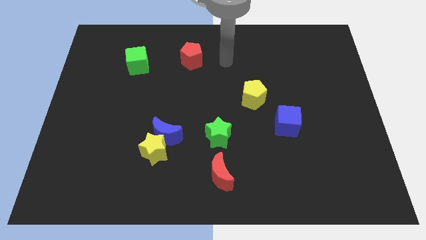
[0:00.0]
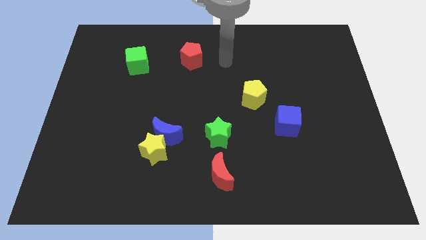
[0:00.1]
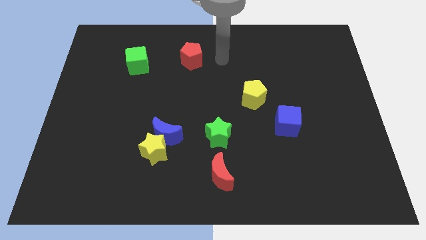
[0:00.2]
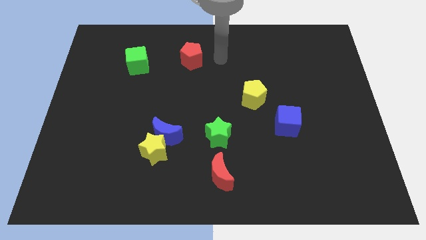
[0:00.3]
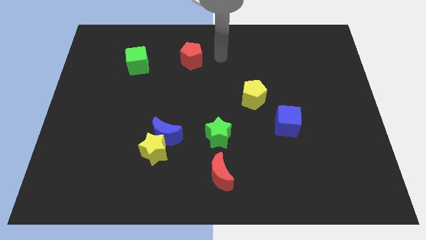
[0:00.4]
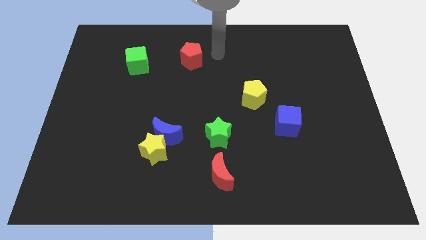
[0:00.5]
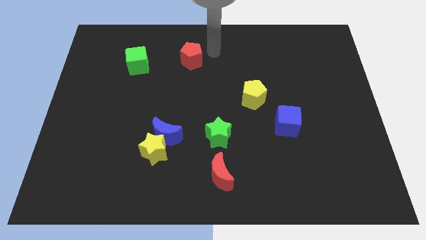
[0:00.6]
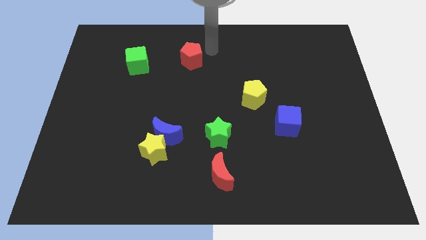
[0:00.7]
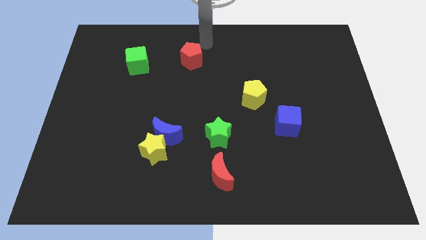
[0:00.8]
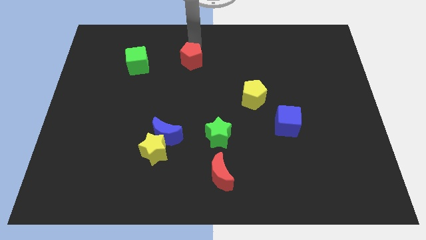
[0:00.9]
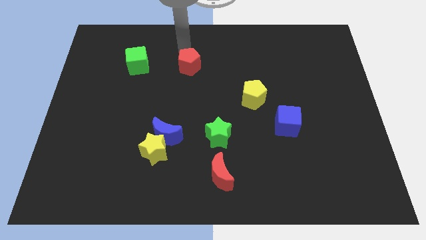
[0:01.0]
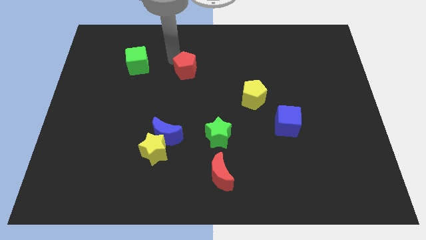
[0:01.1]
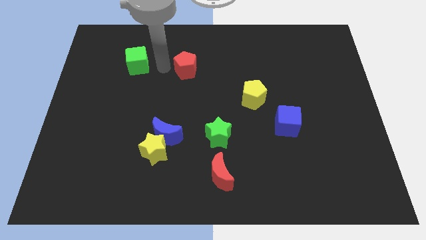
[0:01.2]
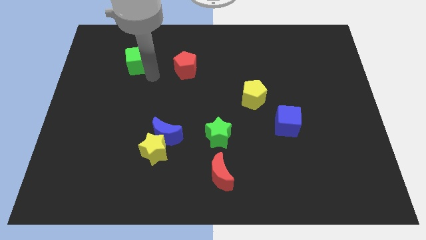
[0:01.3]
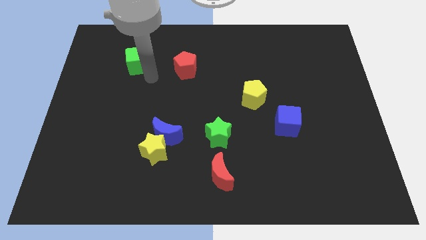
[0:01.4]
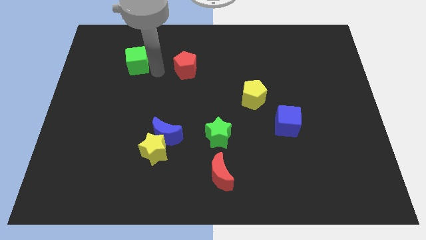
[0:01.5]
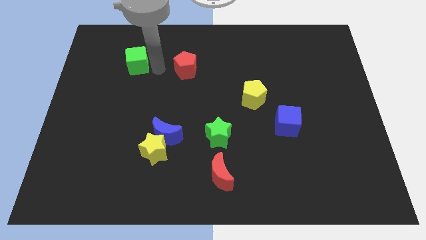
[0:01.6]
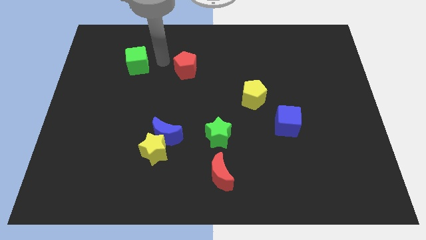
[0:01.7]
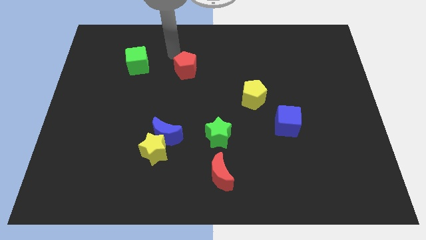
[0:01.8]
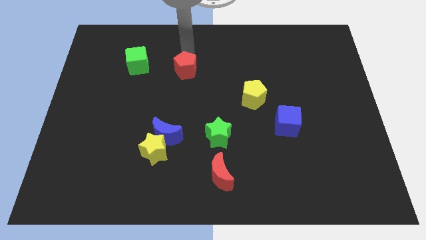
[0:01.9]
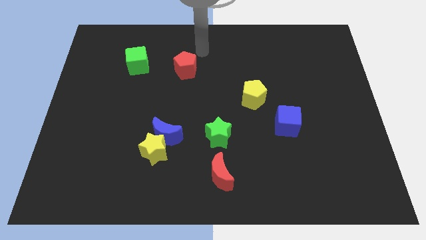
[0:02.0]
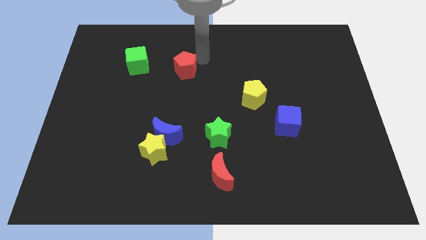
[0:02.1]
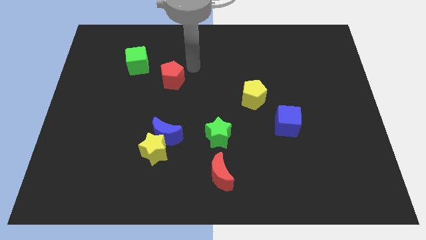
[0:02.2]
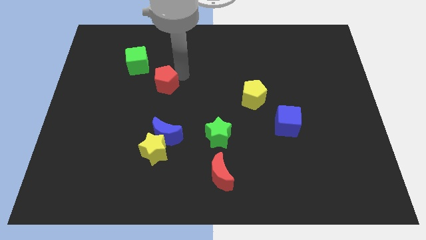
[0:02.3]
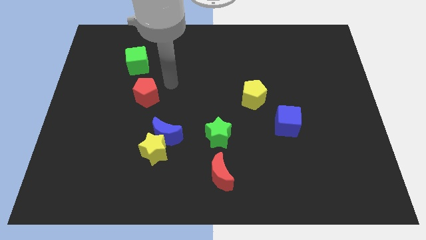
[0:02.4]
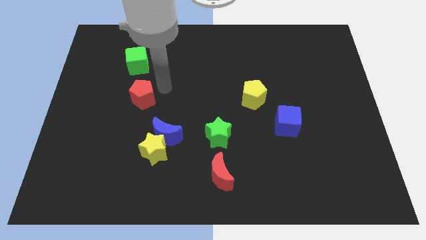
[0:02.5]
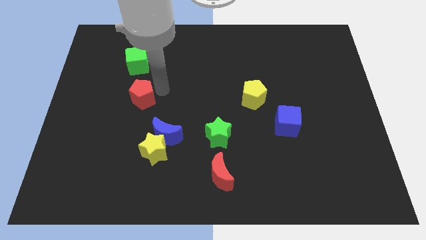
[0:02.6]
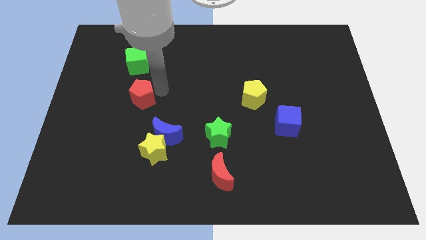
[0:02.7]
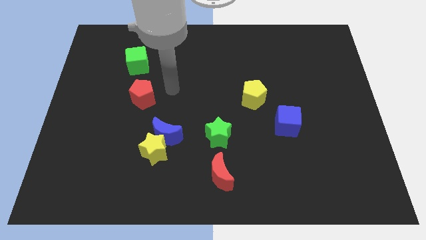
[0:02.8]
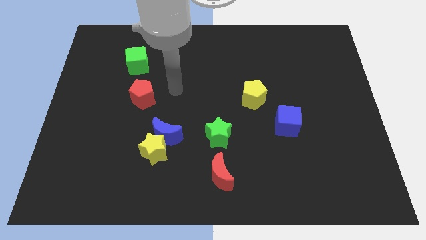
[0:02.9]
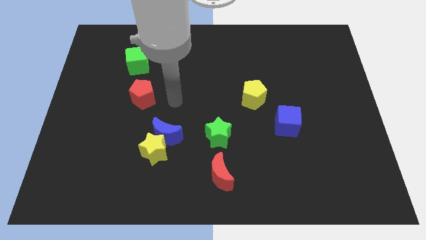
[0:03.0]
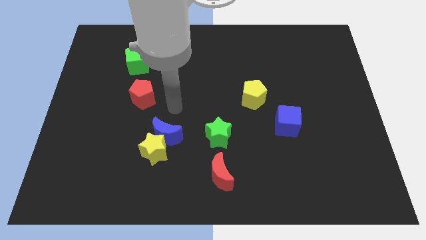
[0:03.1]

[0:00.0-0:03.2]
push the red pentagon to the center

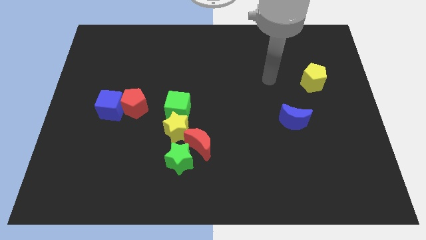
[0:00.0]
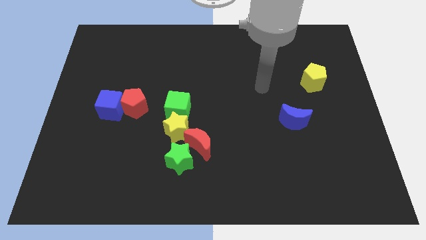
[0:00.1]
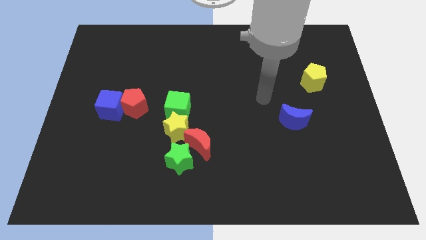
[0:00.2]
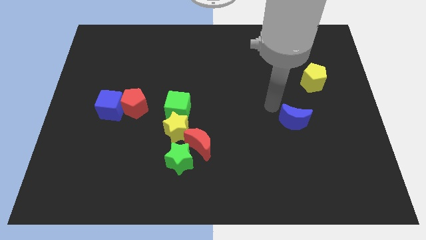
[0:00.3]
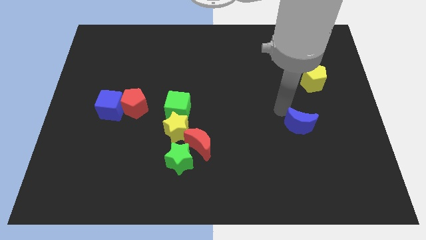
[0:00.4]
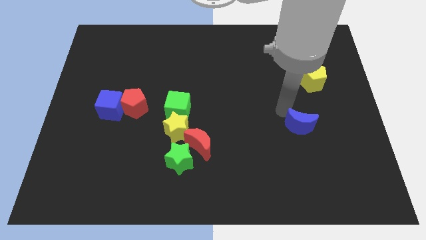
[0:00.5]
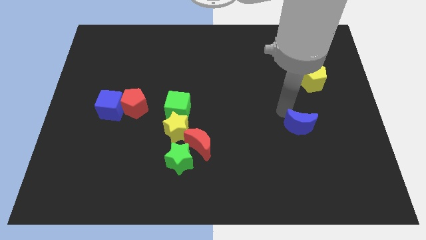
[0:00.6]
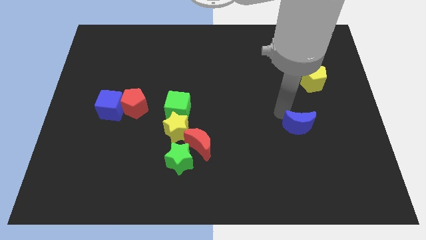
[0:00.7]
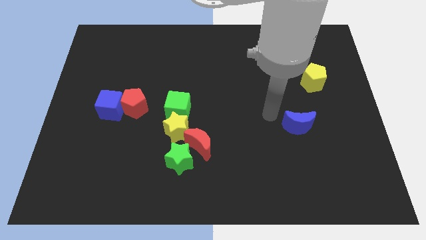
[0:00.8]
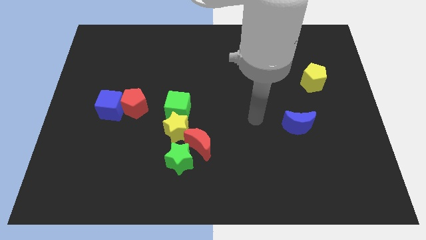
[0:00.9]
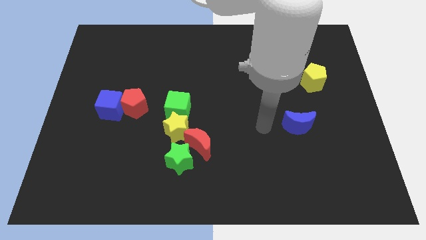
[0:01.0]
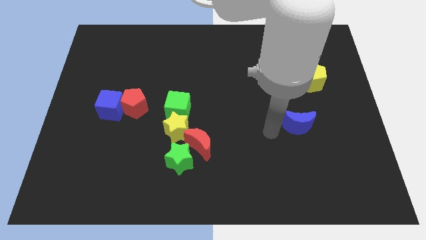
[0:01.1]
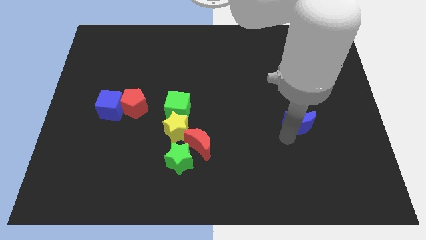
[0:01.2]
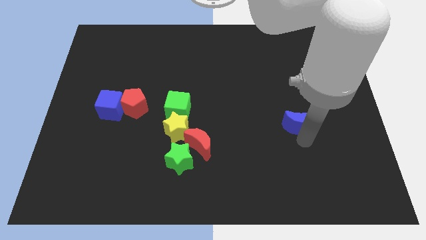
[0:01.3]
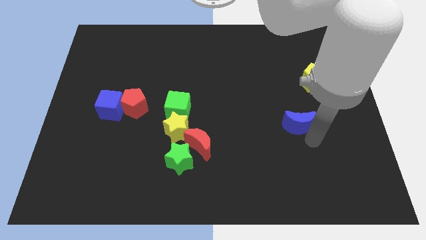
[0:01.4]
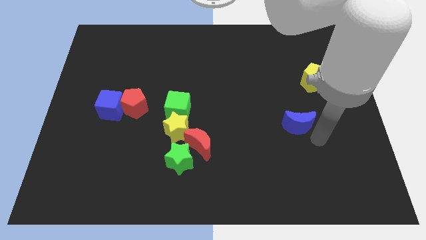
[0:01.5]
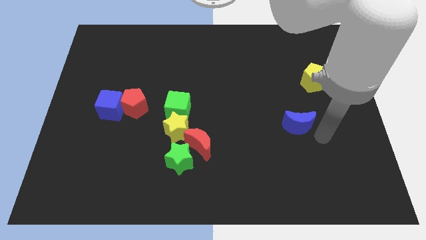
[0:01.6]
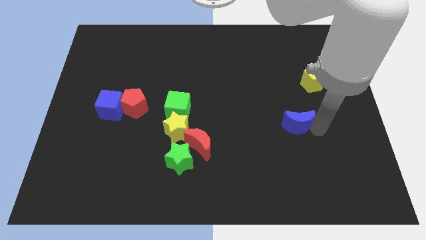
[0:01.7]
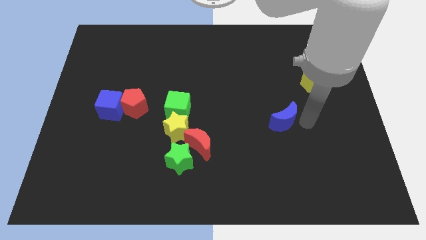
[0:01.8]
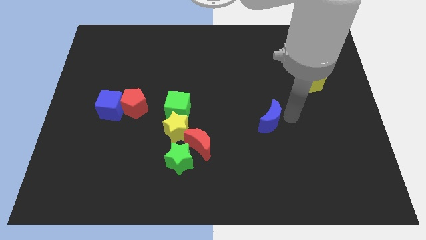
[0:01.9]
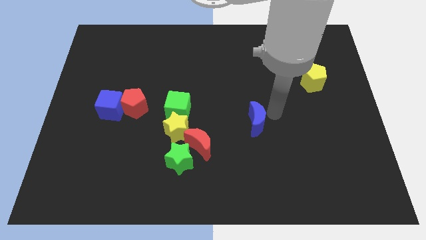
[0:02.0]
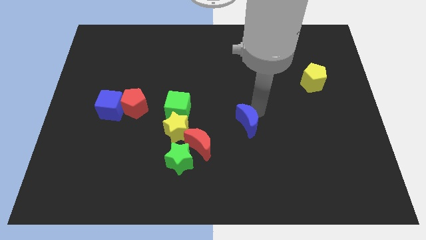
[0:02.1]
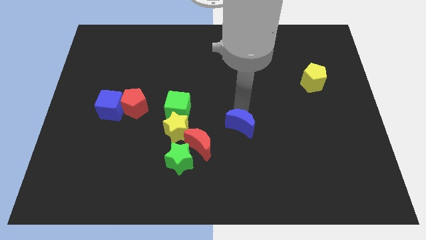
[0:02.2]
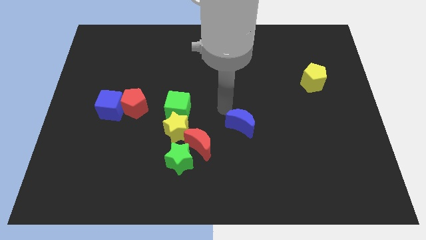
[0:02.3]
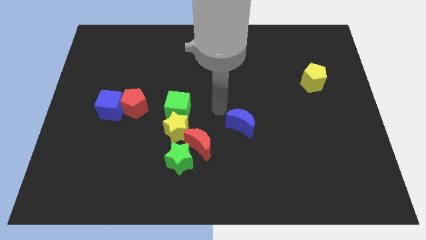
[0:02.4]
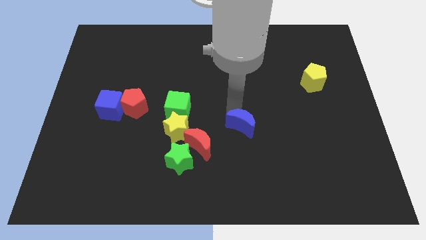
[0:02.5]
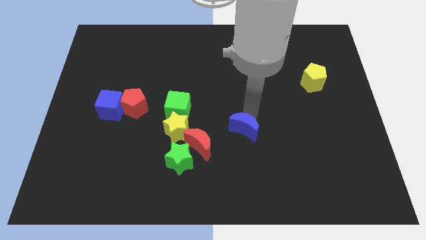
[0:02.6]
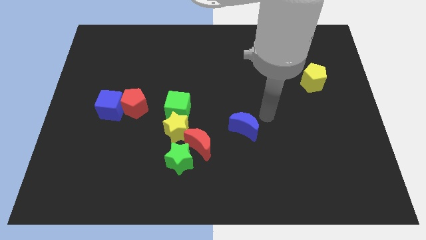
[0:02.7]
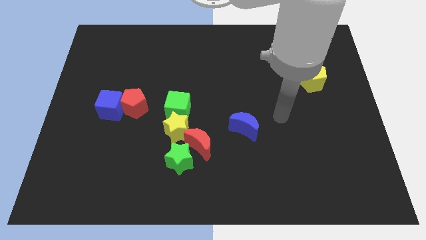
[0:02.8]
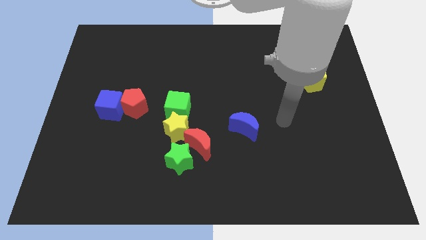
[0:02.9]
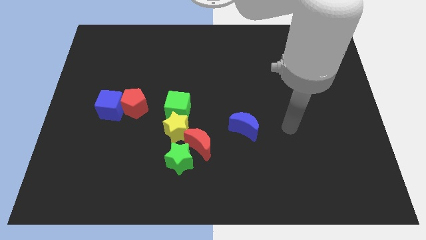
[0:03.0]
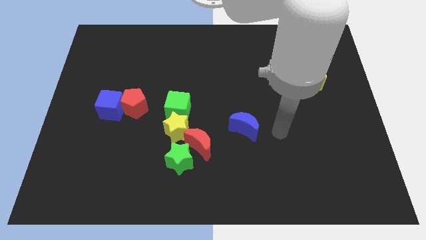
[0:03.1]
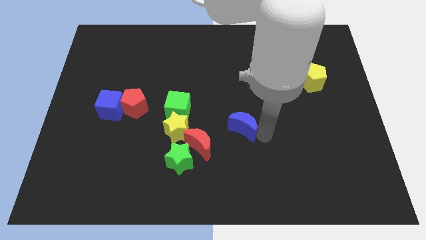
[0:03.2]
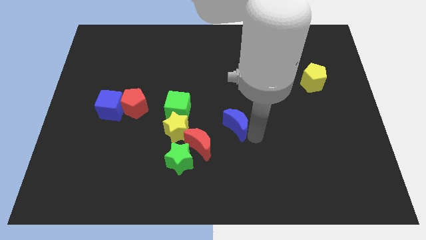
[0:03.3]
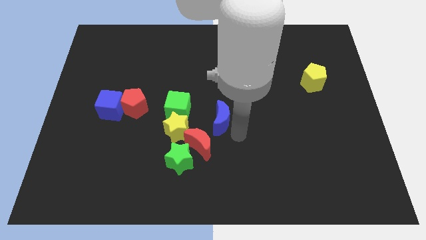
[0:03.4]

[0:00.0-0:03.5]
move the blue moon to the center

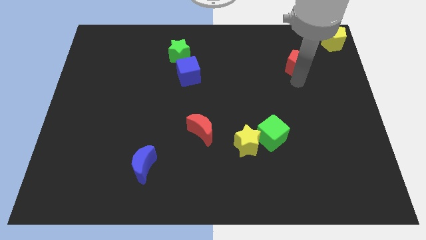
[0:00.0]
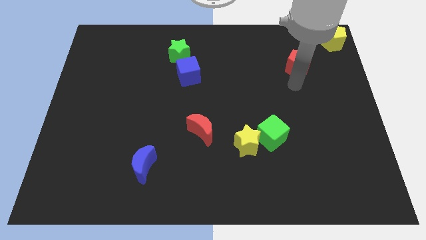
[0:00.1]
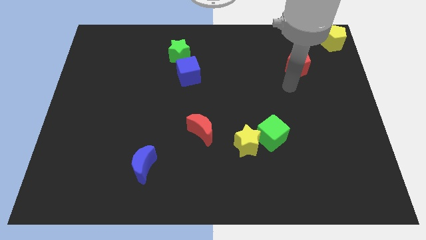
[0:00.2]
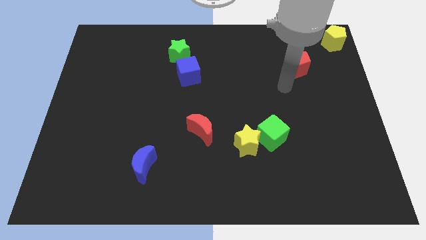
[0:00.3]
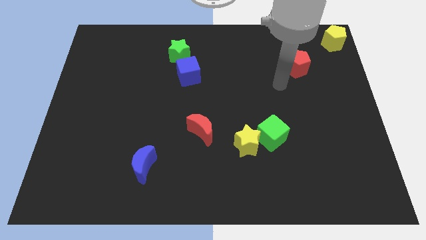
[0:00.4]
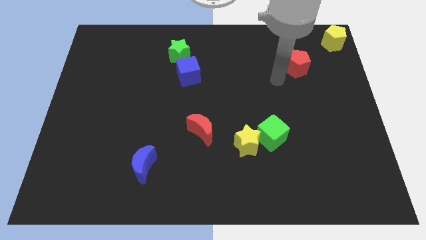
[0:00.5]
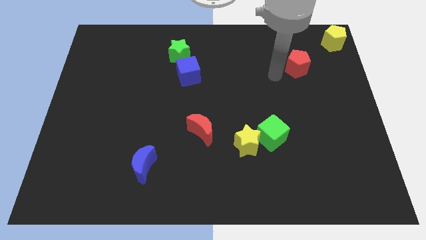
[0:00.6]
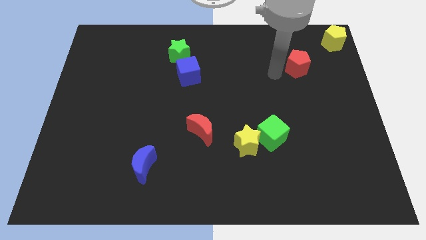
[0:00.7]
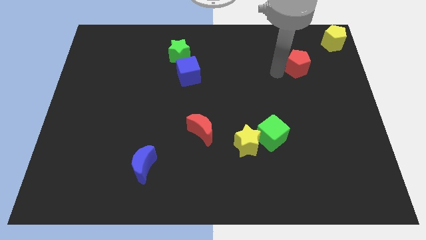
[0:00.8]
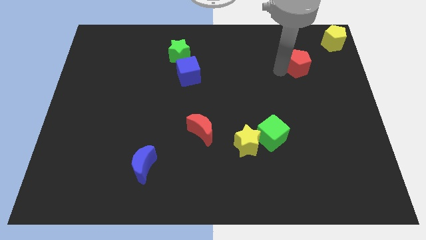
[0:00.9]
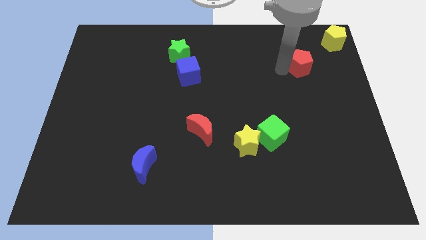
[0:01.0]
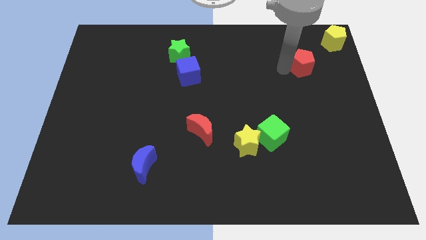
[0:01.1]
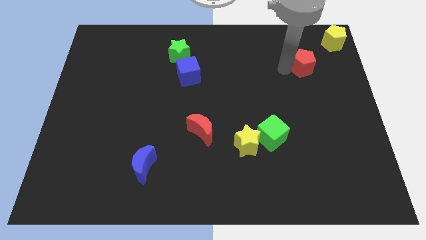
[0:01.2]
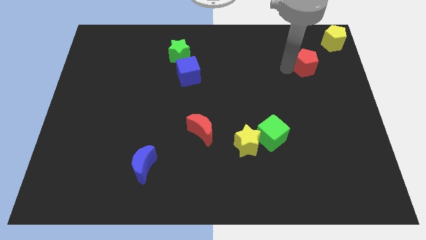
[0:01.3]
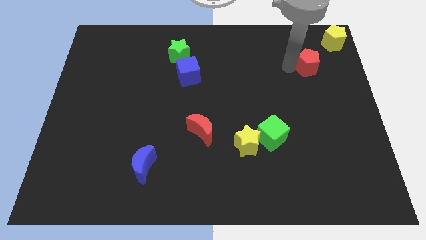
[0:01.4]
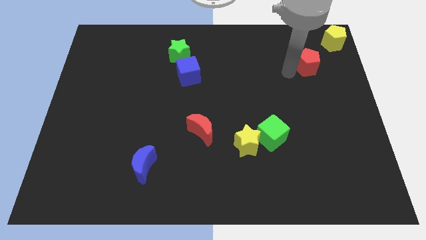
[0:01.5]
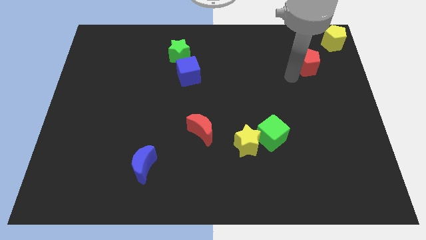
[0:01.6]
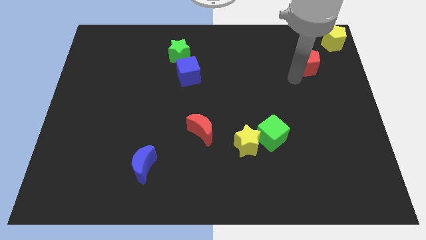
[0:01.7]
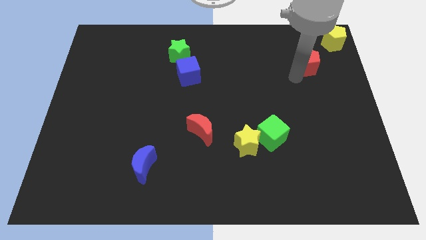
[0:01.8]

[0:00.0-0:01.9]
push the red pentagon towards the yellow pentagon

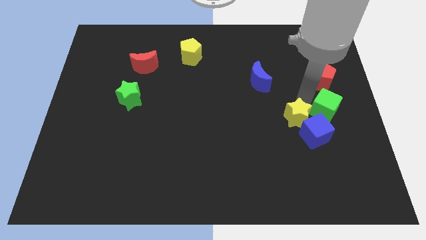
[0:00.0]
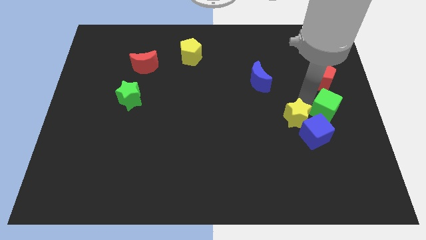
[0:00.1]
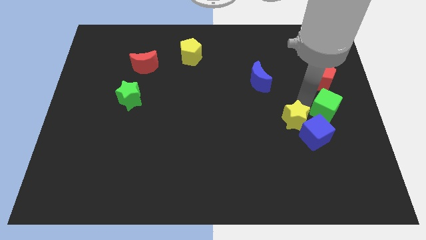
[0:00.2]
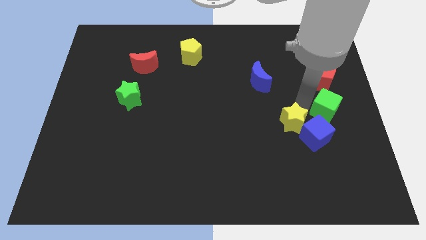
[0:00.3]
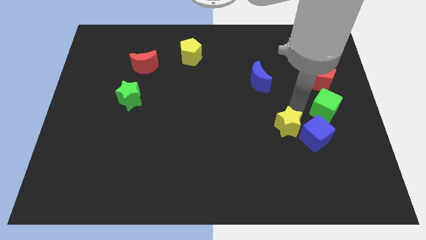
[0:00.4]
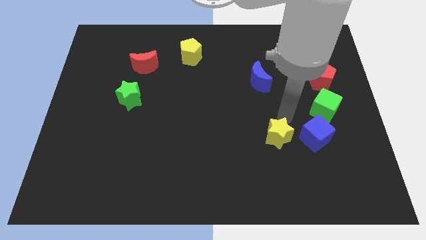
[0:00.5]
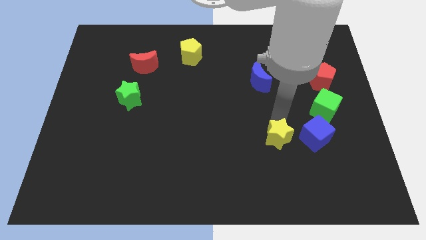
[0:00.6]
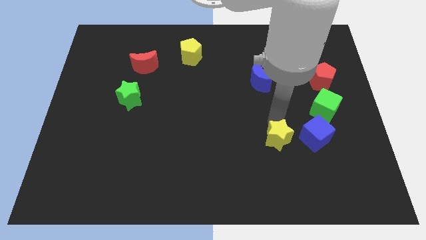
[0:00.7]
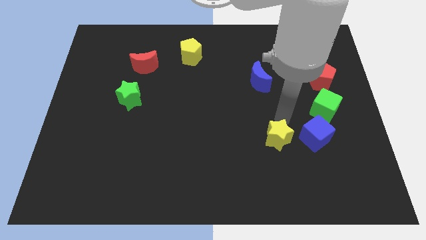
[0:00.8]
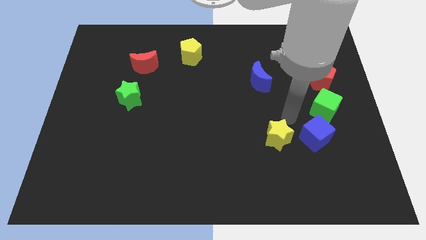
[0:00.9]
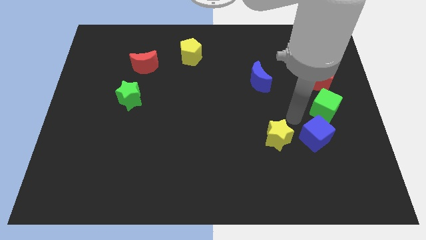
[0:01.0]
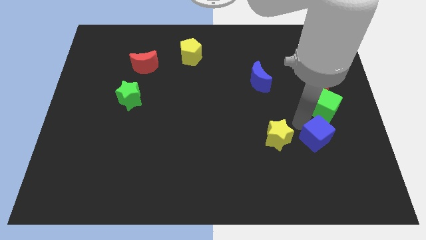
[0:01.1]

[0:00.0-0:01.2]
separate the yellow star from the blue cube
